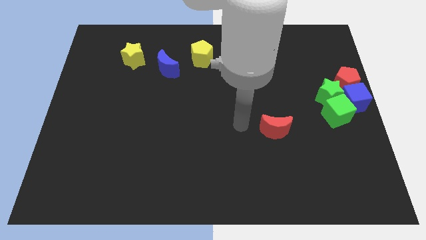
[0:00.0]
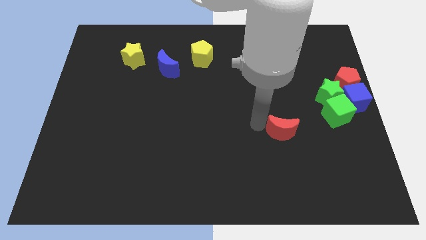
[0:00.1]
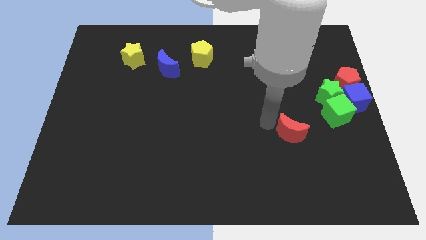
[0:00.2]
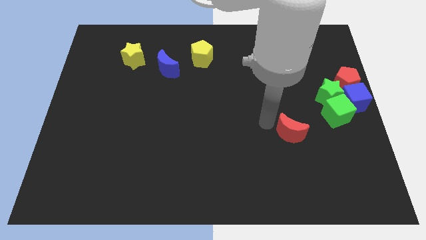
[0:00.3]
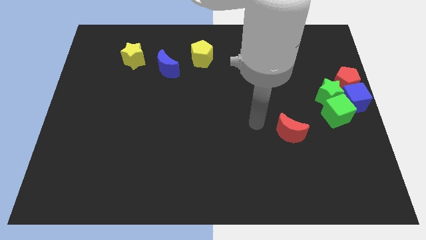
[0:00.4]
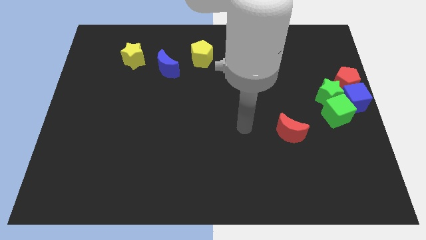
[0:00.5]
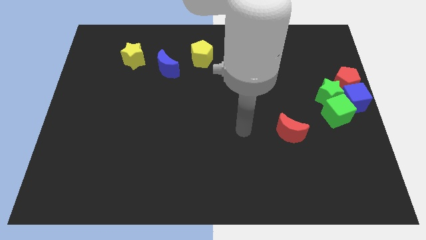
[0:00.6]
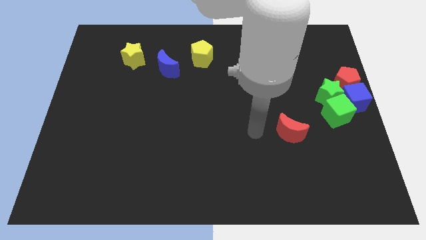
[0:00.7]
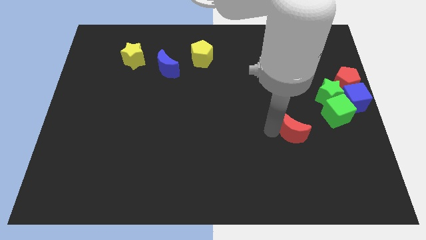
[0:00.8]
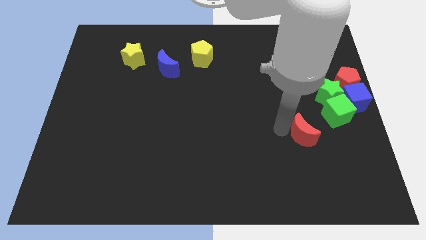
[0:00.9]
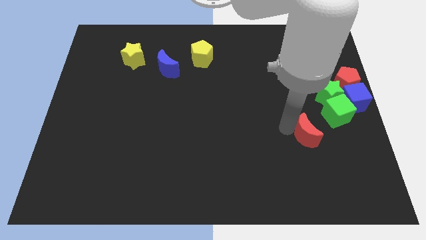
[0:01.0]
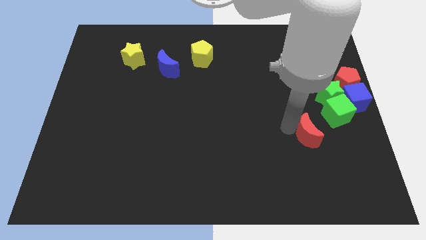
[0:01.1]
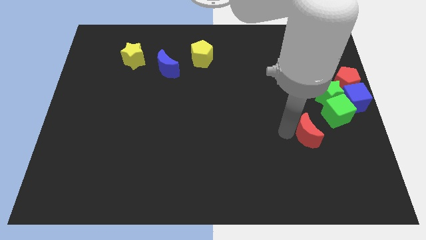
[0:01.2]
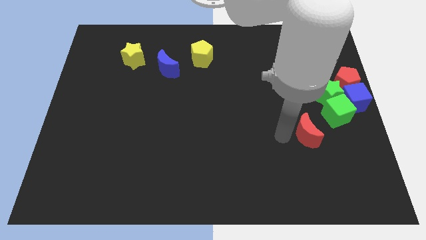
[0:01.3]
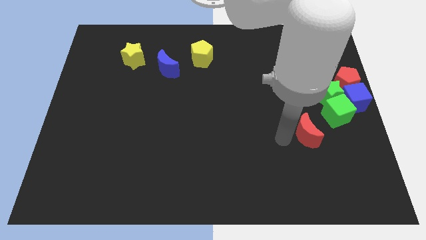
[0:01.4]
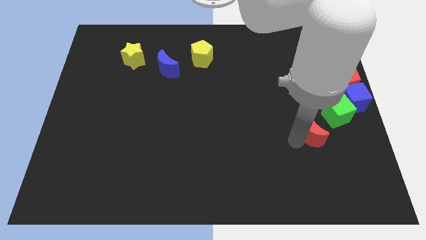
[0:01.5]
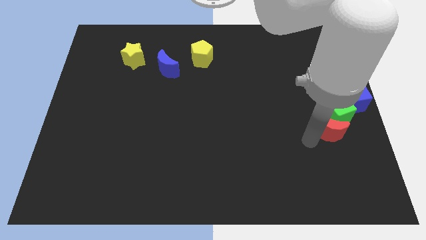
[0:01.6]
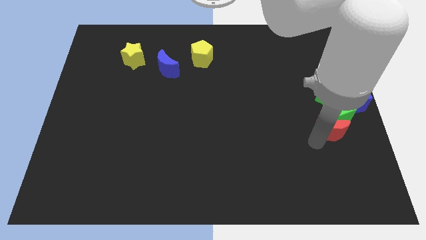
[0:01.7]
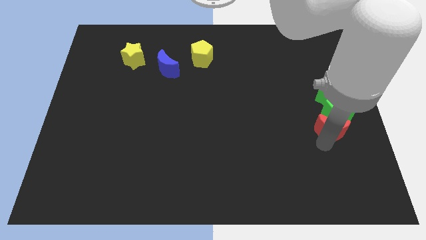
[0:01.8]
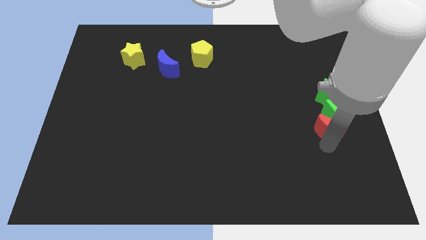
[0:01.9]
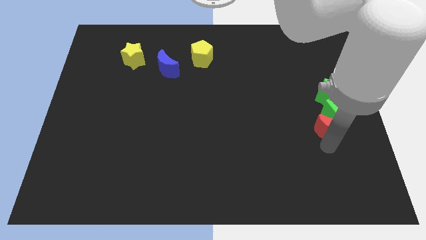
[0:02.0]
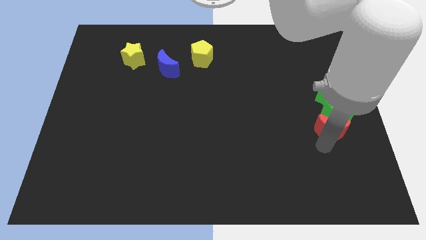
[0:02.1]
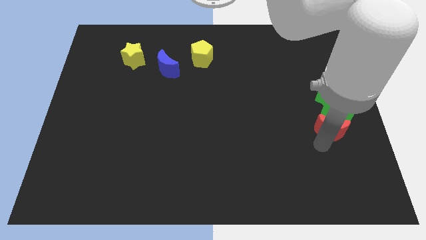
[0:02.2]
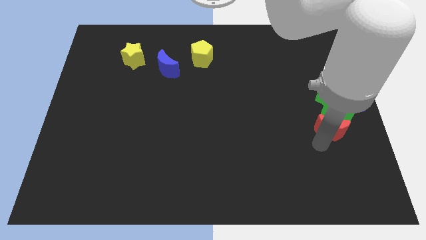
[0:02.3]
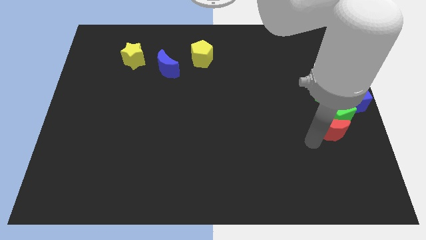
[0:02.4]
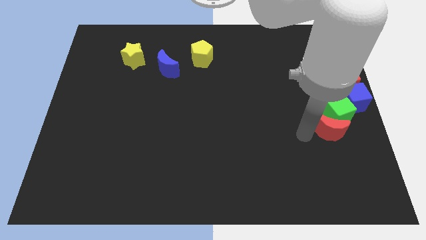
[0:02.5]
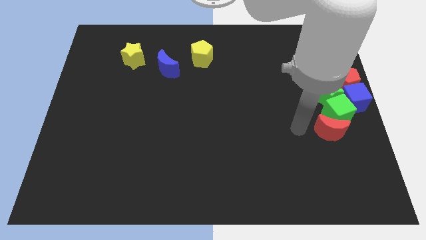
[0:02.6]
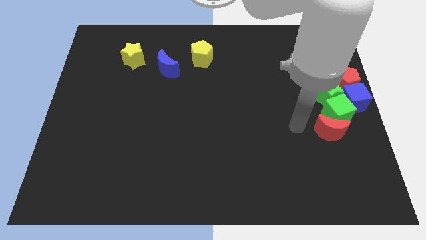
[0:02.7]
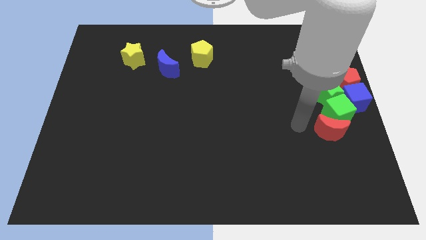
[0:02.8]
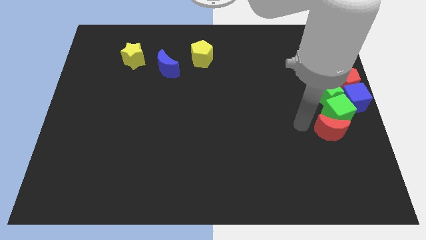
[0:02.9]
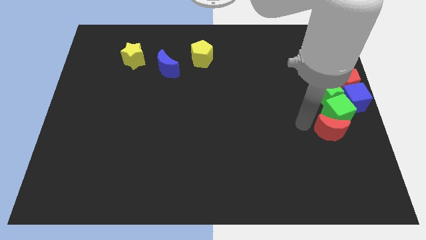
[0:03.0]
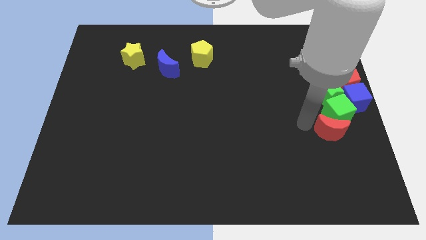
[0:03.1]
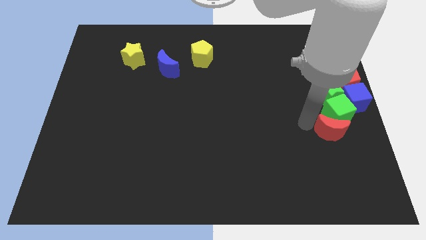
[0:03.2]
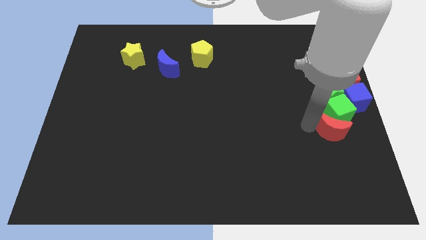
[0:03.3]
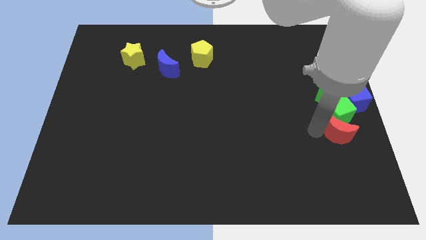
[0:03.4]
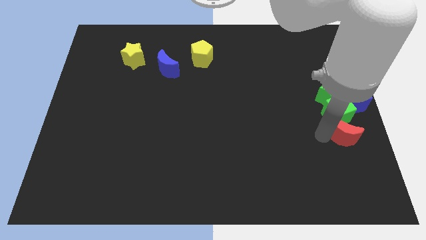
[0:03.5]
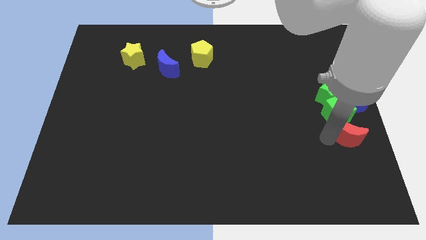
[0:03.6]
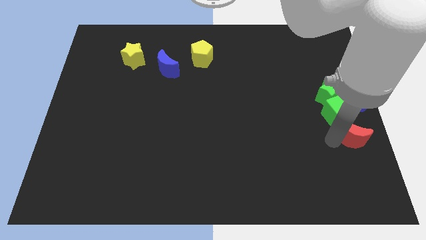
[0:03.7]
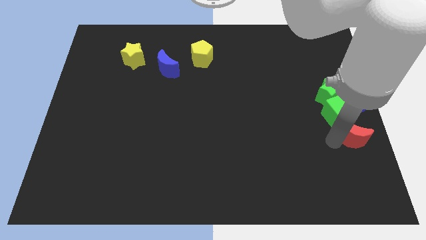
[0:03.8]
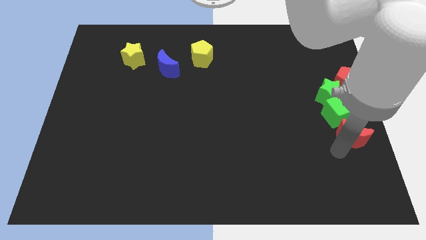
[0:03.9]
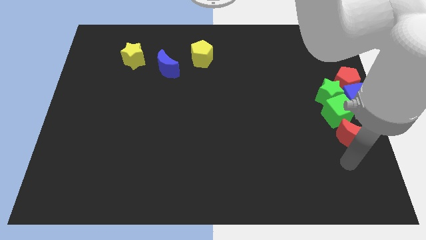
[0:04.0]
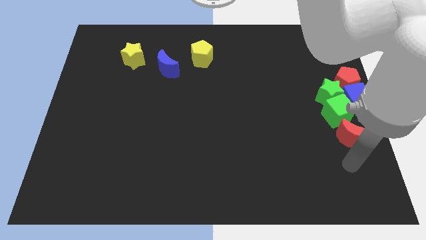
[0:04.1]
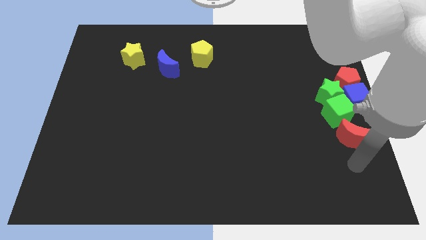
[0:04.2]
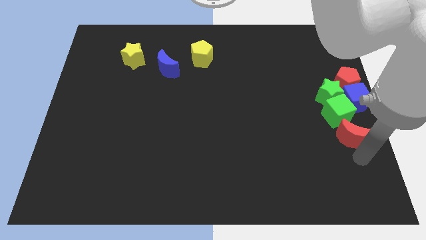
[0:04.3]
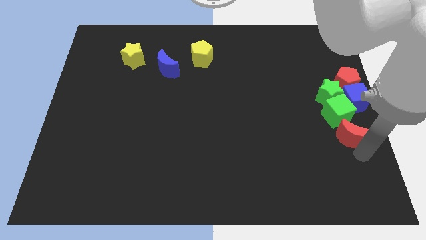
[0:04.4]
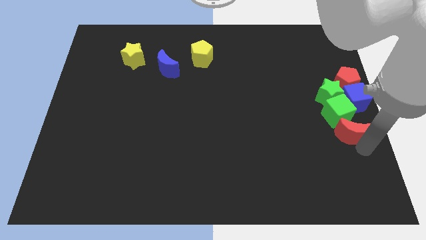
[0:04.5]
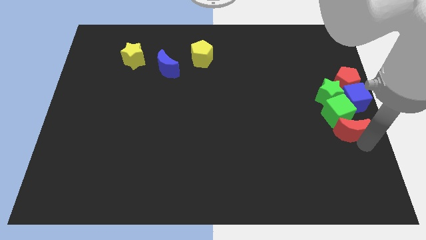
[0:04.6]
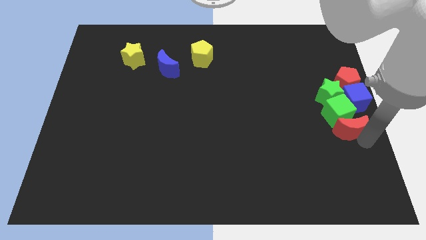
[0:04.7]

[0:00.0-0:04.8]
move the red crescent to the bottom of the green cube

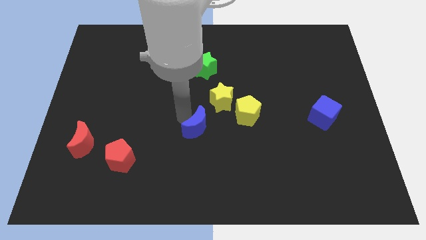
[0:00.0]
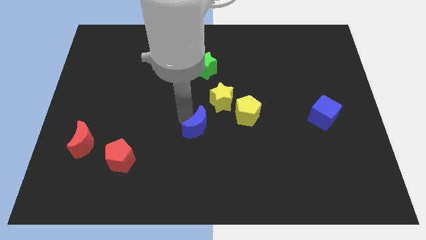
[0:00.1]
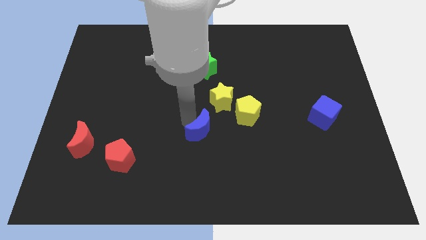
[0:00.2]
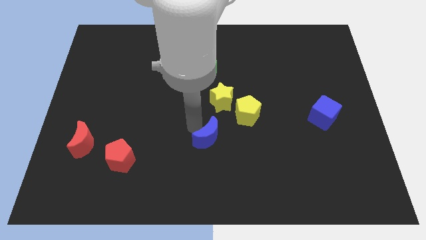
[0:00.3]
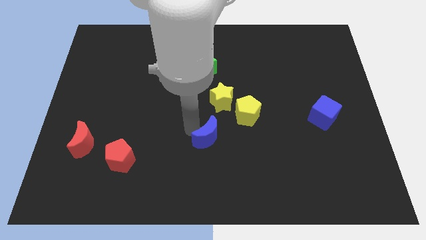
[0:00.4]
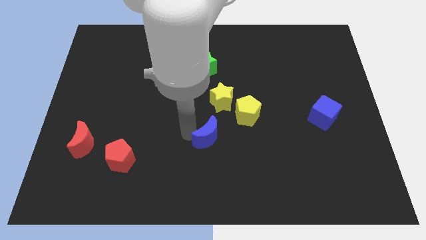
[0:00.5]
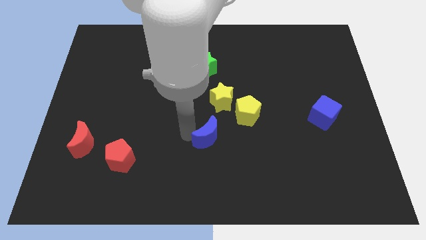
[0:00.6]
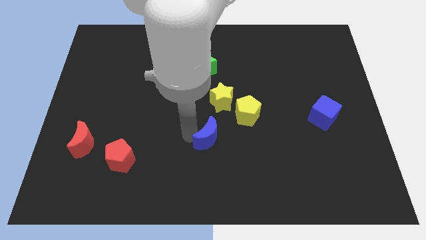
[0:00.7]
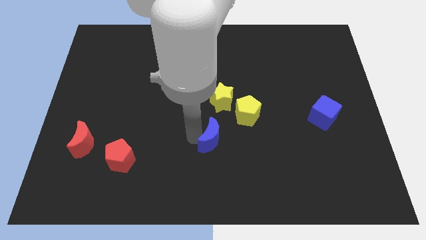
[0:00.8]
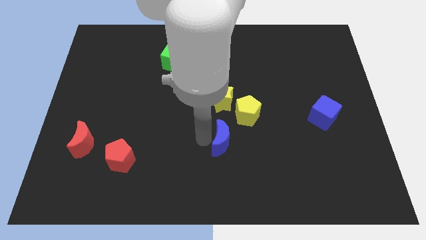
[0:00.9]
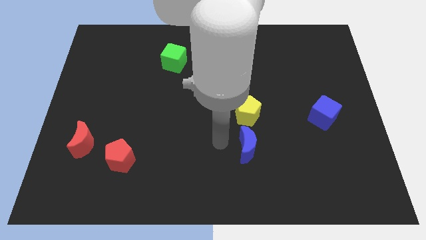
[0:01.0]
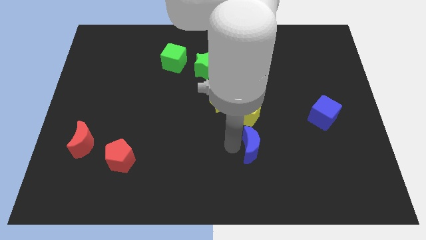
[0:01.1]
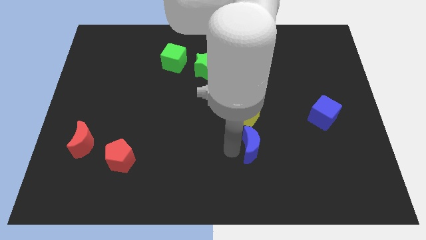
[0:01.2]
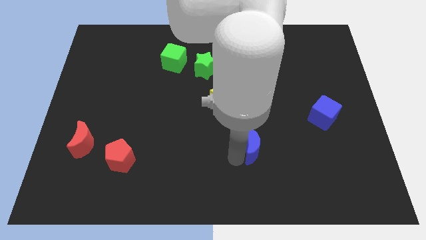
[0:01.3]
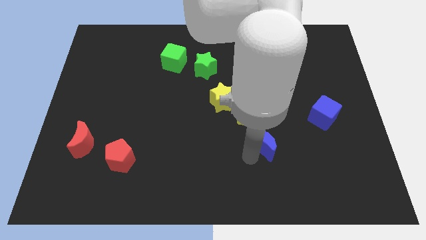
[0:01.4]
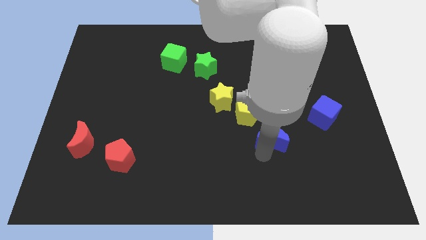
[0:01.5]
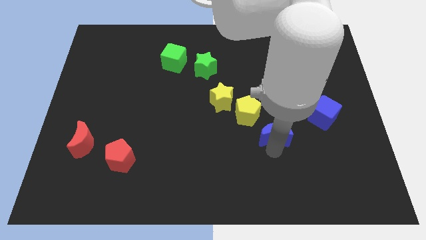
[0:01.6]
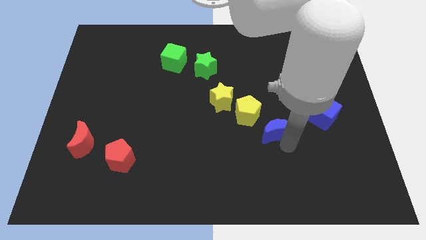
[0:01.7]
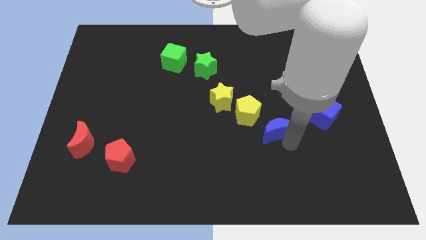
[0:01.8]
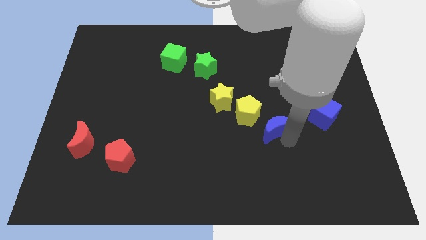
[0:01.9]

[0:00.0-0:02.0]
move blue crescent towards the yellow pentagon

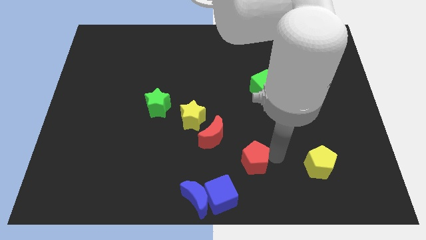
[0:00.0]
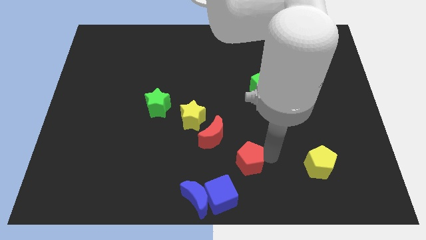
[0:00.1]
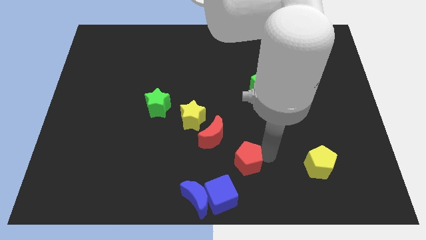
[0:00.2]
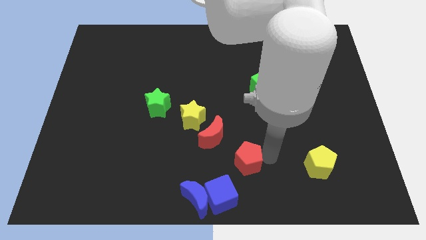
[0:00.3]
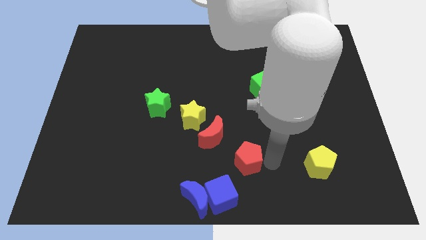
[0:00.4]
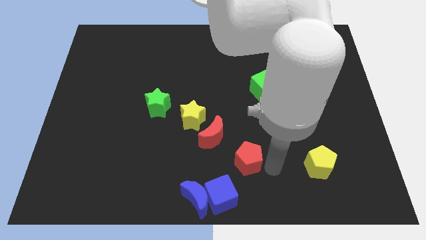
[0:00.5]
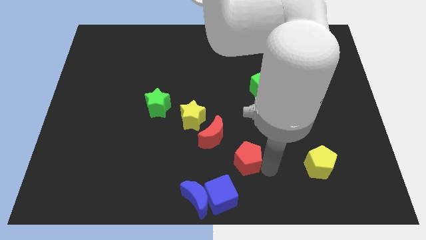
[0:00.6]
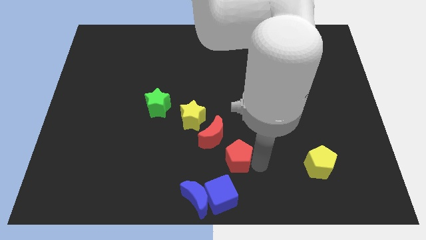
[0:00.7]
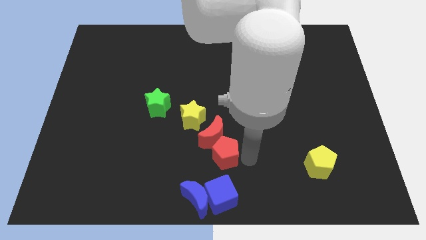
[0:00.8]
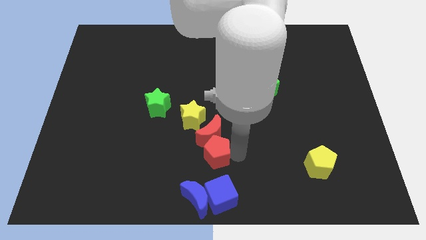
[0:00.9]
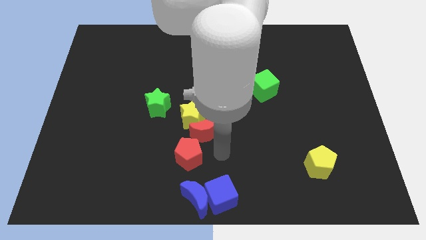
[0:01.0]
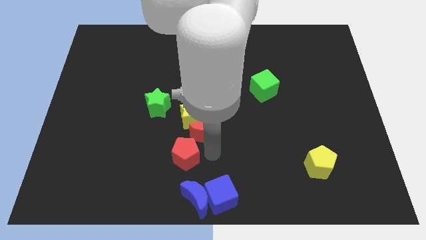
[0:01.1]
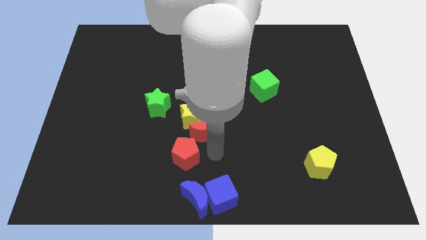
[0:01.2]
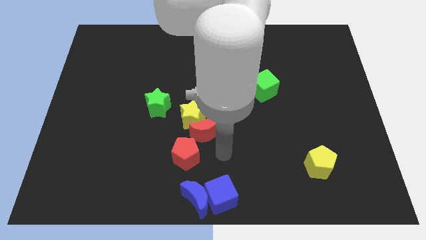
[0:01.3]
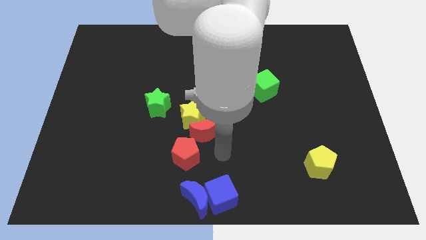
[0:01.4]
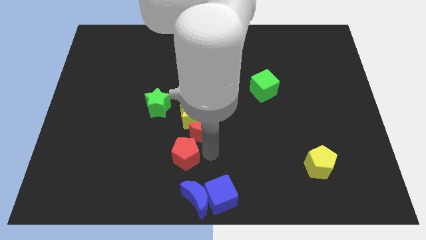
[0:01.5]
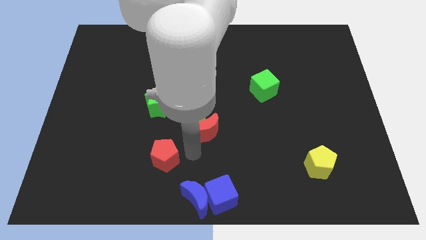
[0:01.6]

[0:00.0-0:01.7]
place the red pentagon above the blue moon

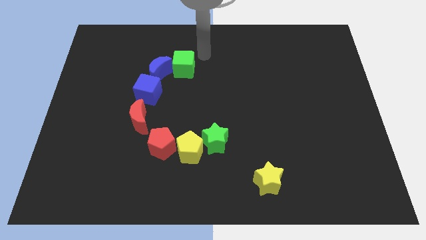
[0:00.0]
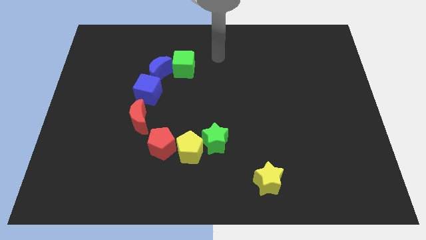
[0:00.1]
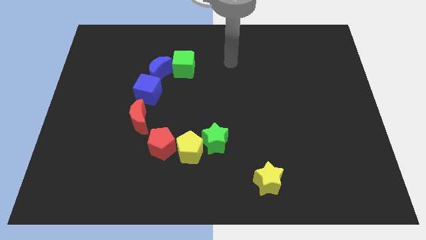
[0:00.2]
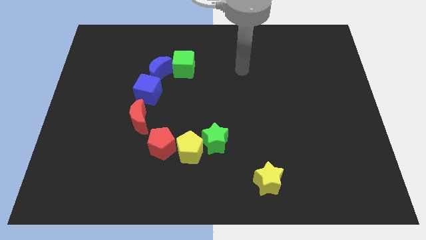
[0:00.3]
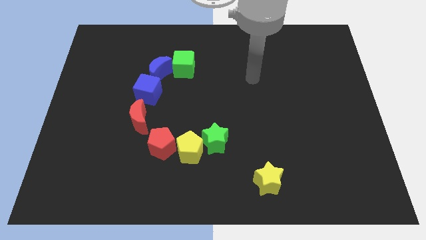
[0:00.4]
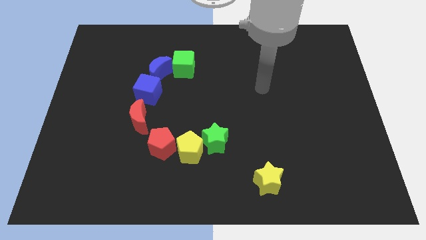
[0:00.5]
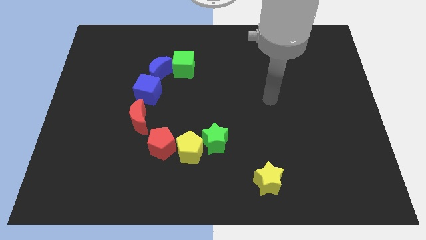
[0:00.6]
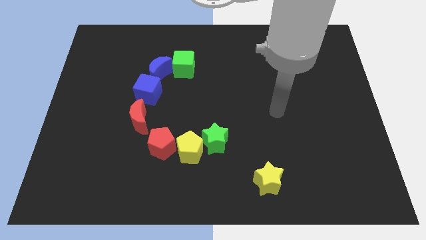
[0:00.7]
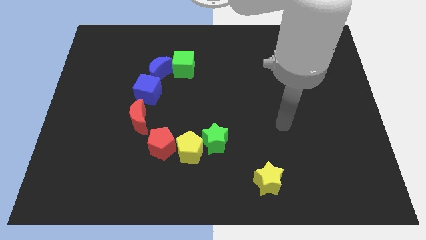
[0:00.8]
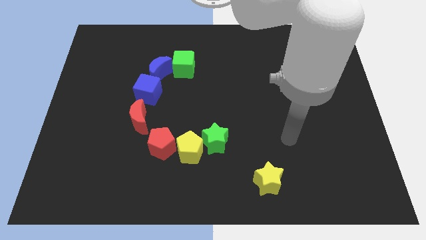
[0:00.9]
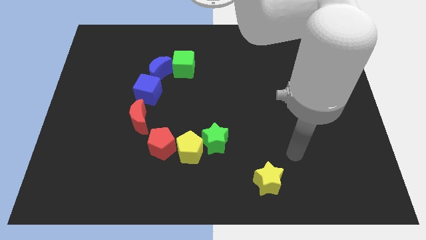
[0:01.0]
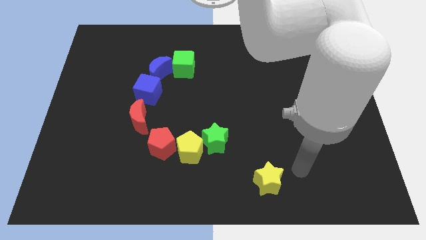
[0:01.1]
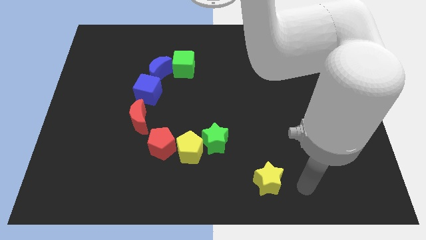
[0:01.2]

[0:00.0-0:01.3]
move the arm to the yellow star
